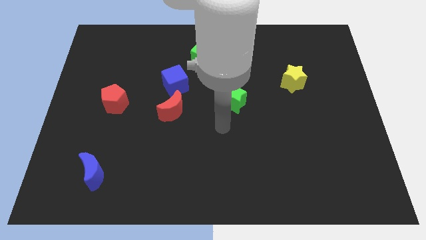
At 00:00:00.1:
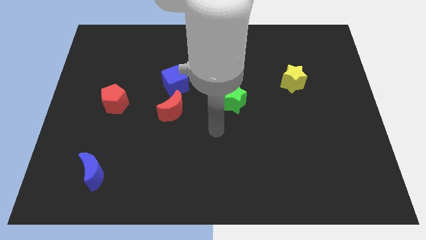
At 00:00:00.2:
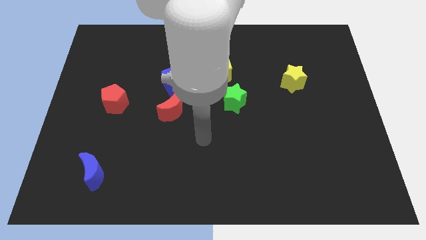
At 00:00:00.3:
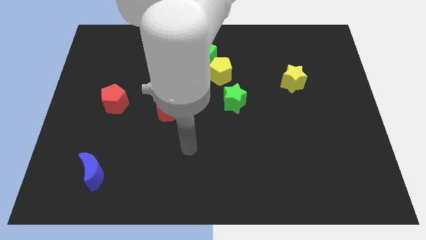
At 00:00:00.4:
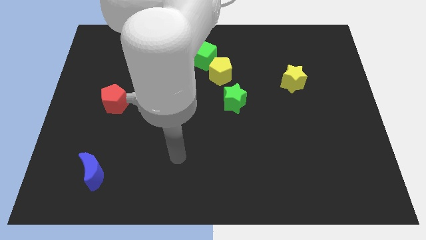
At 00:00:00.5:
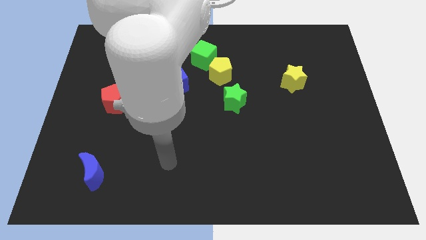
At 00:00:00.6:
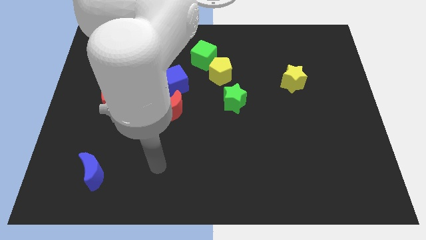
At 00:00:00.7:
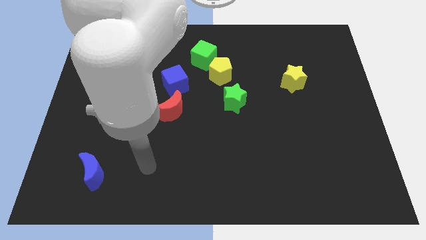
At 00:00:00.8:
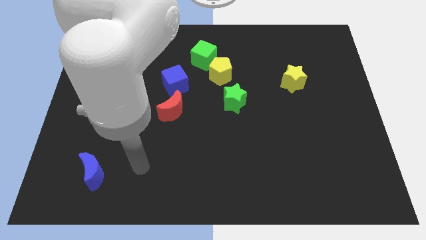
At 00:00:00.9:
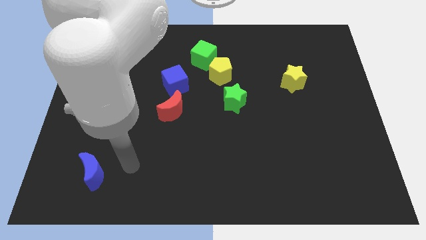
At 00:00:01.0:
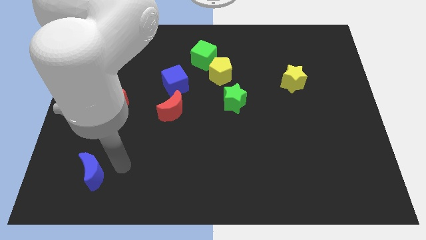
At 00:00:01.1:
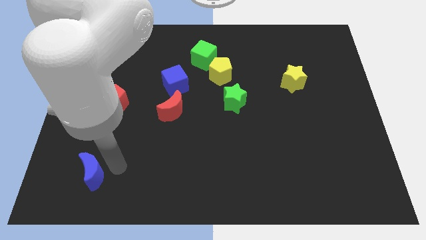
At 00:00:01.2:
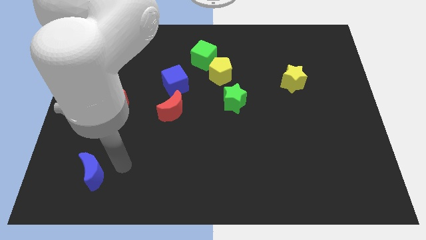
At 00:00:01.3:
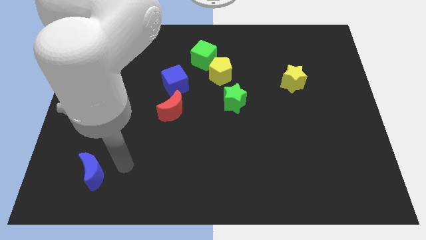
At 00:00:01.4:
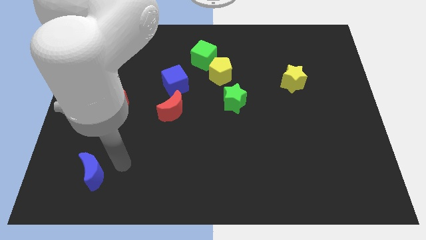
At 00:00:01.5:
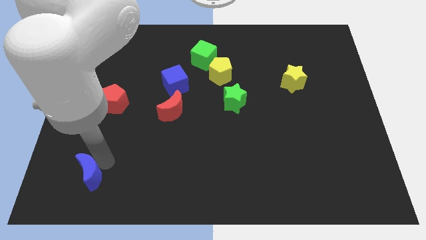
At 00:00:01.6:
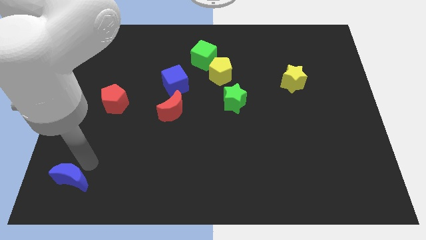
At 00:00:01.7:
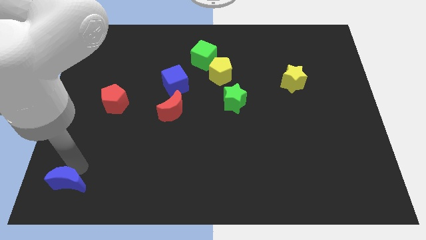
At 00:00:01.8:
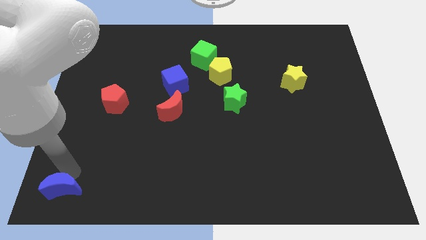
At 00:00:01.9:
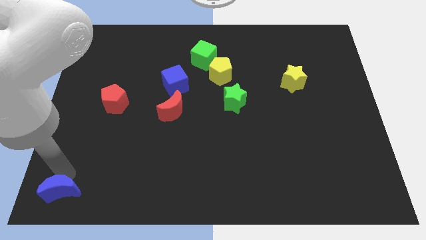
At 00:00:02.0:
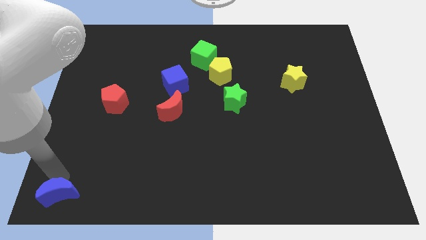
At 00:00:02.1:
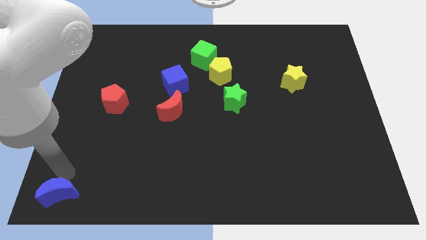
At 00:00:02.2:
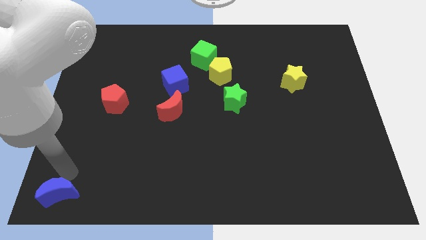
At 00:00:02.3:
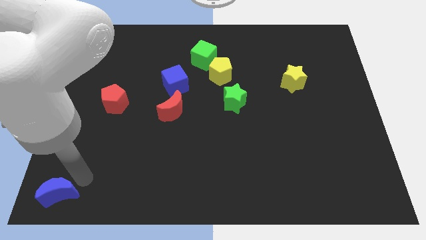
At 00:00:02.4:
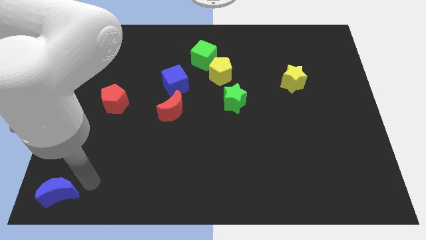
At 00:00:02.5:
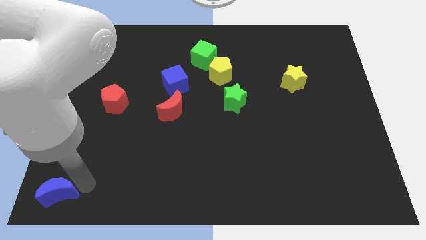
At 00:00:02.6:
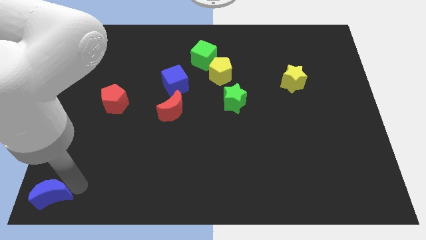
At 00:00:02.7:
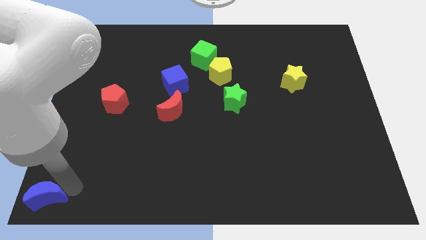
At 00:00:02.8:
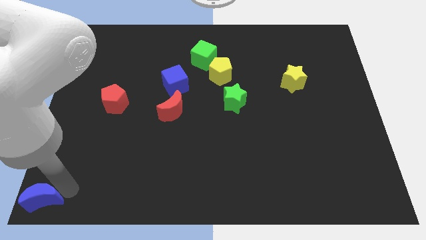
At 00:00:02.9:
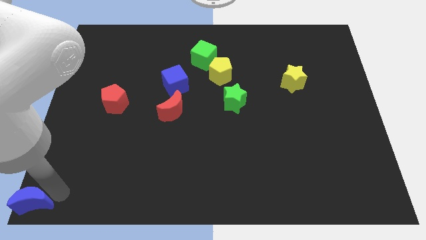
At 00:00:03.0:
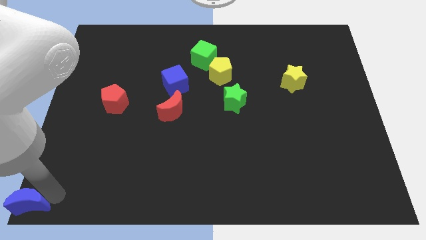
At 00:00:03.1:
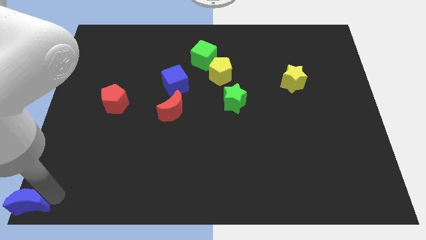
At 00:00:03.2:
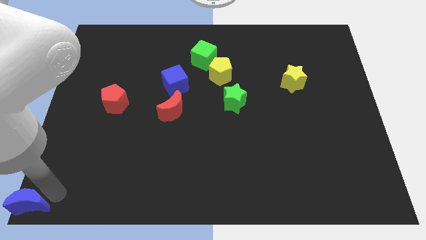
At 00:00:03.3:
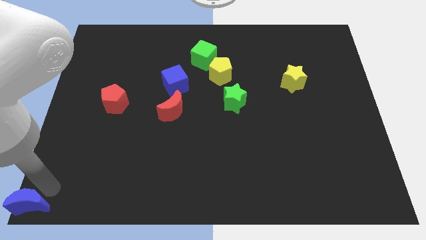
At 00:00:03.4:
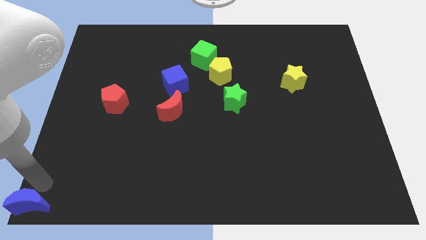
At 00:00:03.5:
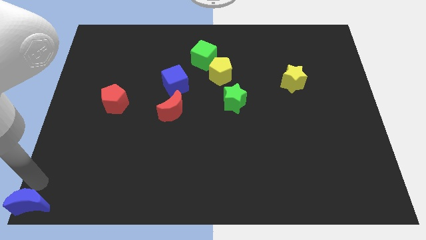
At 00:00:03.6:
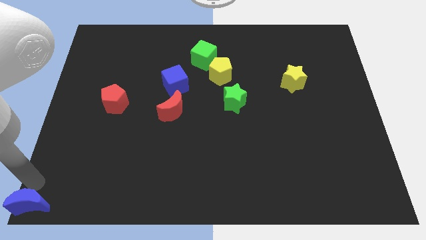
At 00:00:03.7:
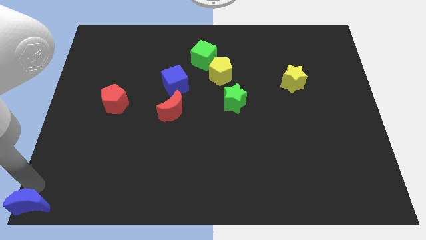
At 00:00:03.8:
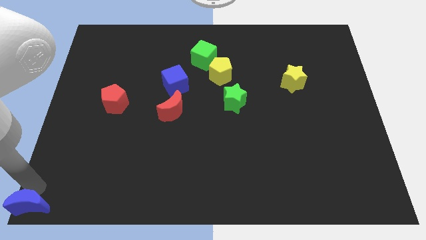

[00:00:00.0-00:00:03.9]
place the blue moon to the bottom left corner of the board

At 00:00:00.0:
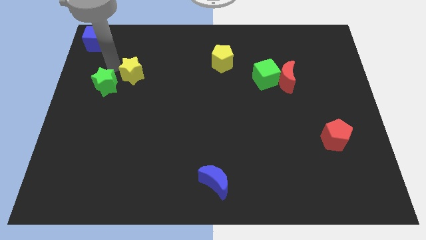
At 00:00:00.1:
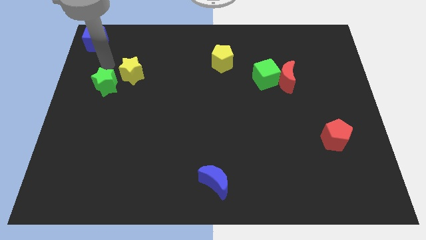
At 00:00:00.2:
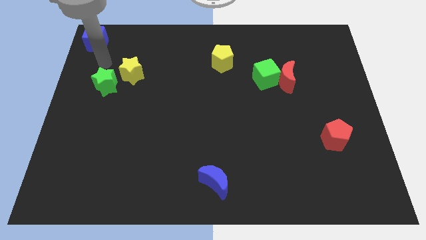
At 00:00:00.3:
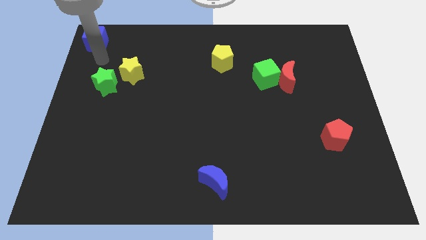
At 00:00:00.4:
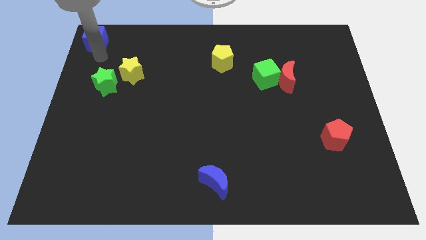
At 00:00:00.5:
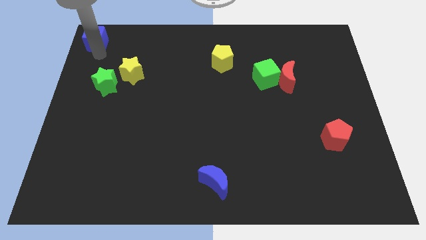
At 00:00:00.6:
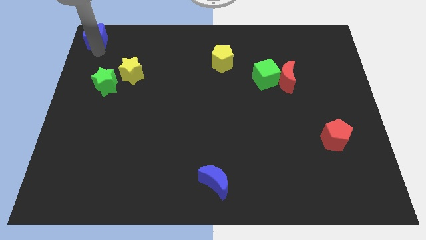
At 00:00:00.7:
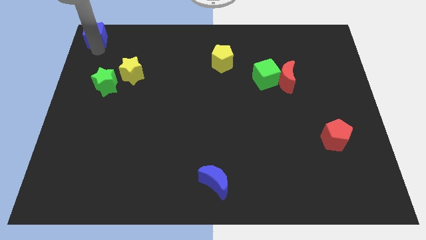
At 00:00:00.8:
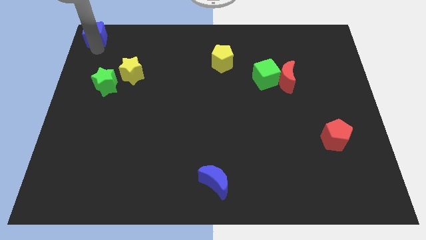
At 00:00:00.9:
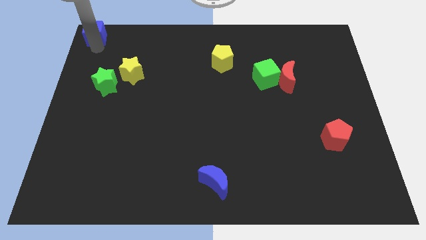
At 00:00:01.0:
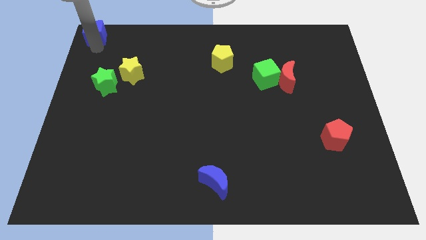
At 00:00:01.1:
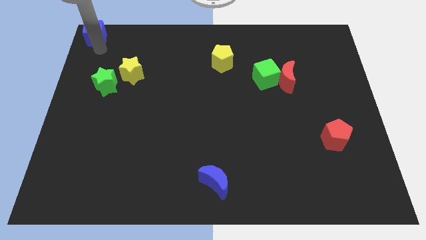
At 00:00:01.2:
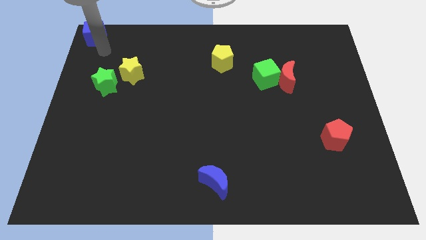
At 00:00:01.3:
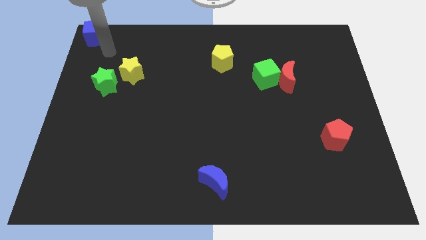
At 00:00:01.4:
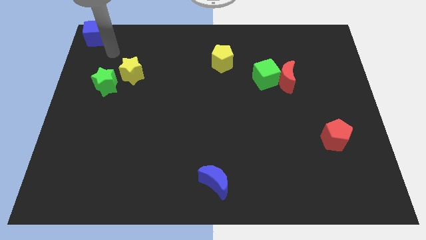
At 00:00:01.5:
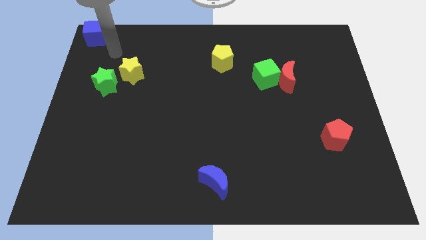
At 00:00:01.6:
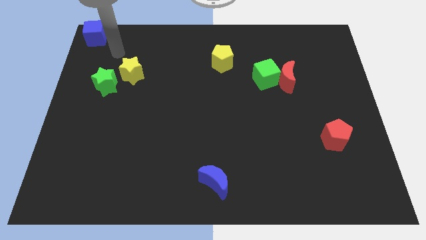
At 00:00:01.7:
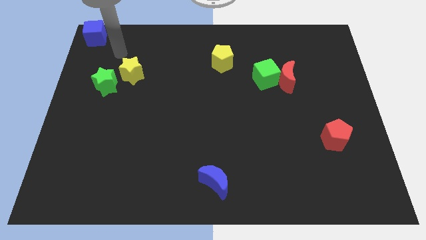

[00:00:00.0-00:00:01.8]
move the blue cube to the top left corner of the board

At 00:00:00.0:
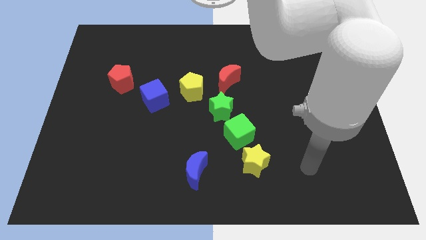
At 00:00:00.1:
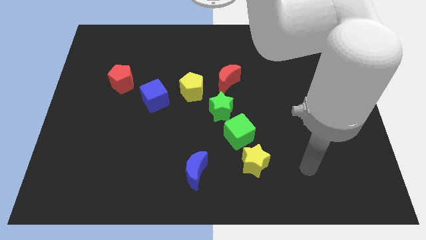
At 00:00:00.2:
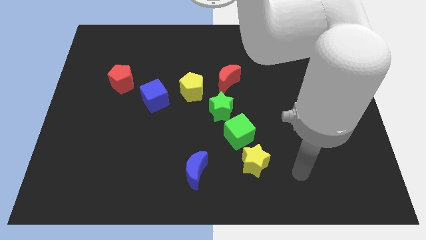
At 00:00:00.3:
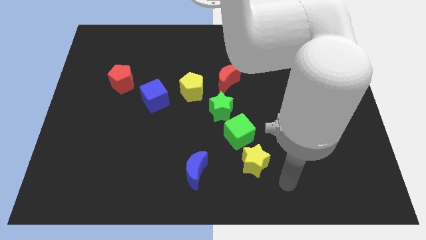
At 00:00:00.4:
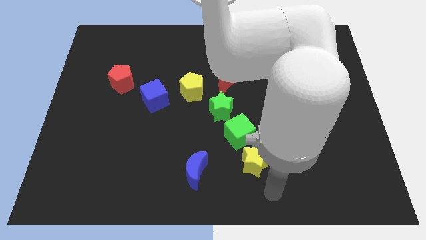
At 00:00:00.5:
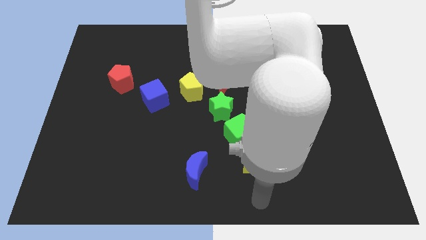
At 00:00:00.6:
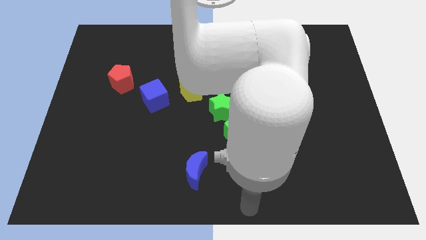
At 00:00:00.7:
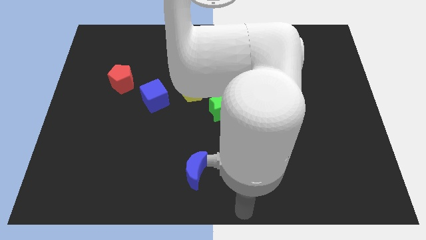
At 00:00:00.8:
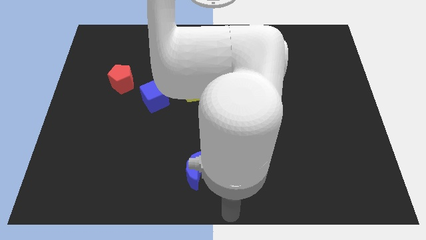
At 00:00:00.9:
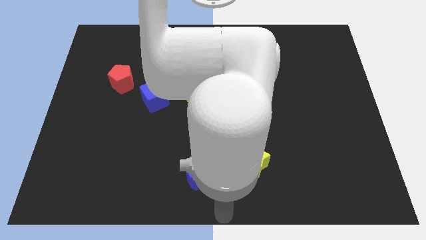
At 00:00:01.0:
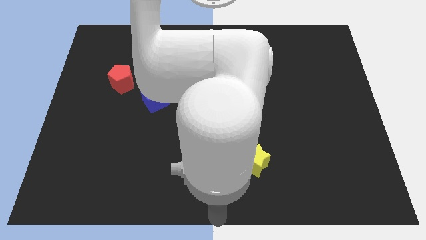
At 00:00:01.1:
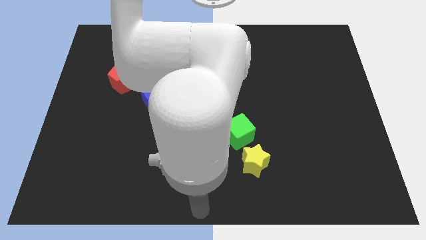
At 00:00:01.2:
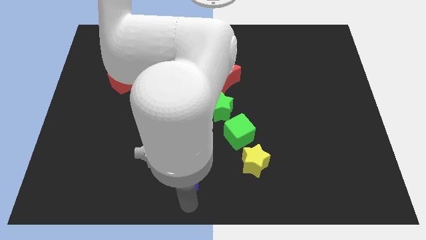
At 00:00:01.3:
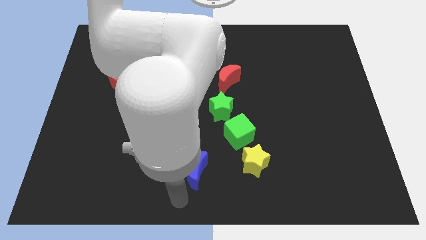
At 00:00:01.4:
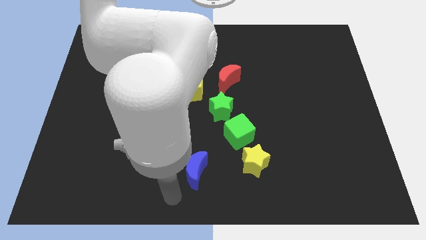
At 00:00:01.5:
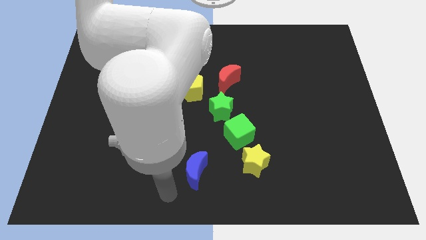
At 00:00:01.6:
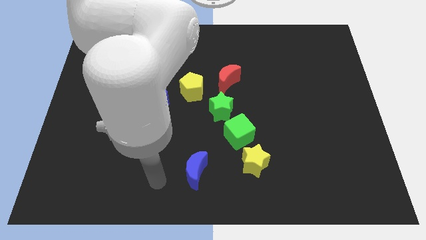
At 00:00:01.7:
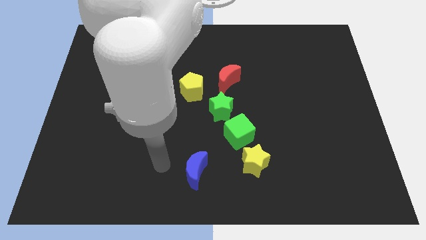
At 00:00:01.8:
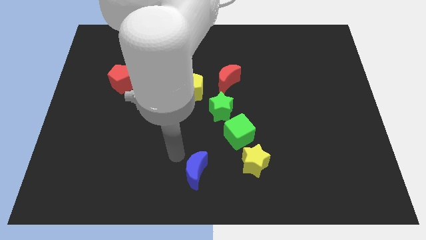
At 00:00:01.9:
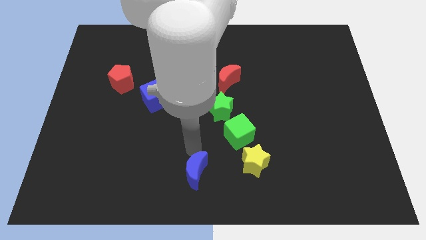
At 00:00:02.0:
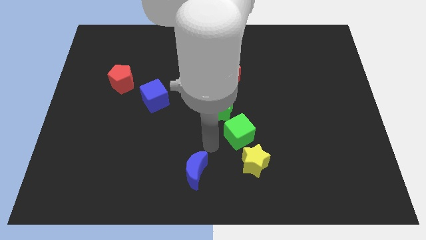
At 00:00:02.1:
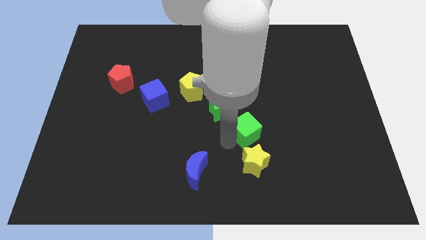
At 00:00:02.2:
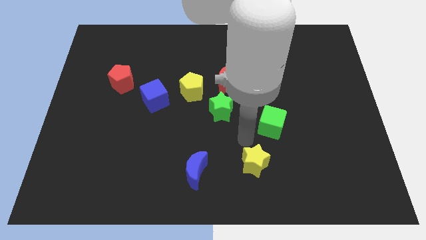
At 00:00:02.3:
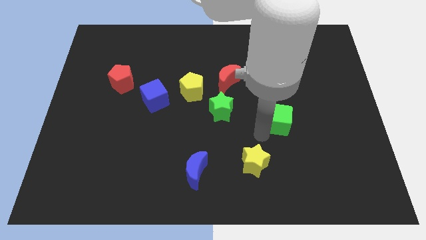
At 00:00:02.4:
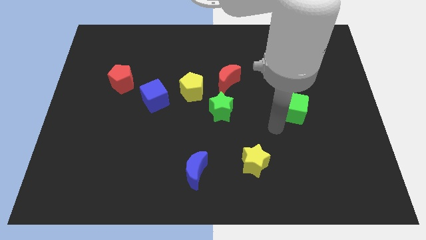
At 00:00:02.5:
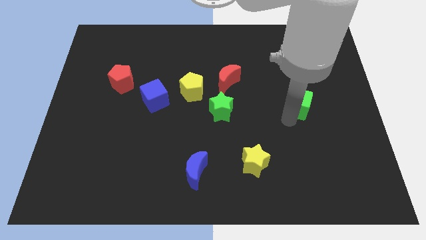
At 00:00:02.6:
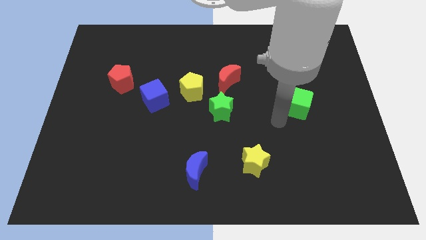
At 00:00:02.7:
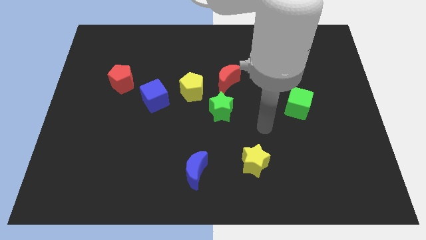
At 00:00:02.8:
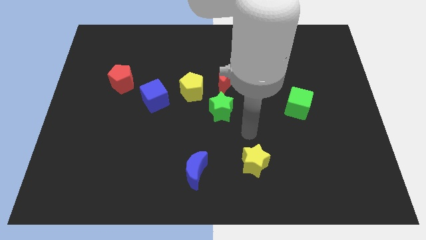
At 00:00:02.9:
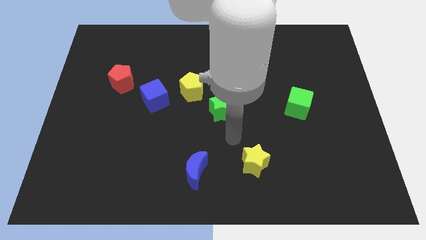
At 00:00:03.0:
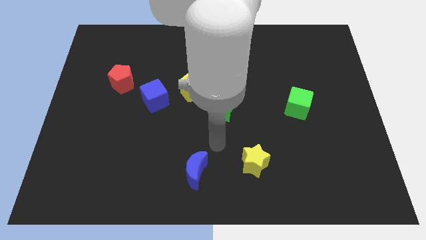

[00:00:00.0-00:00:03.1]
push the green cube away from the diagonal line of blocks
